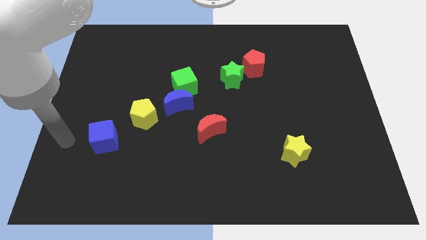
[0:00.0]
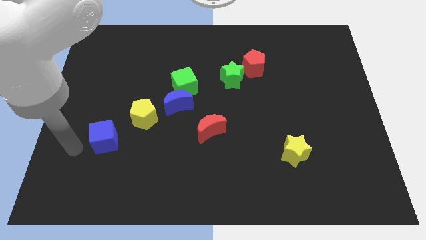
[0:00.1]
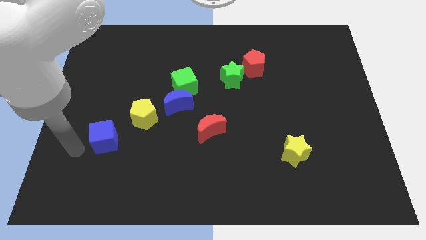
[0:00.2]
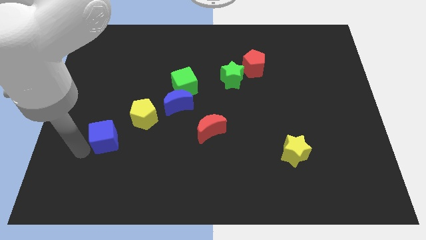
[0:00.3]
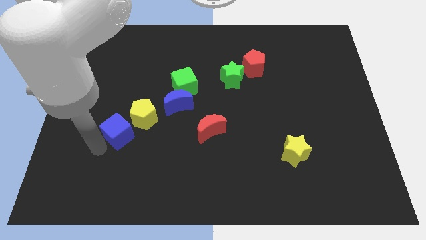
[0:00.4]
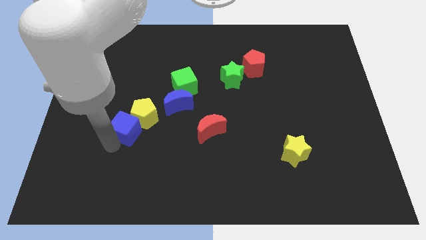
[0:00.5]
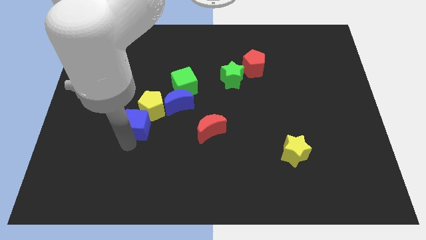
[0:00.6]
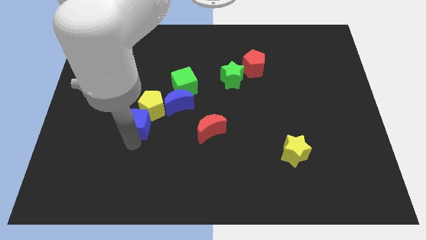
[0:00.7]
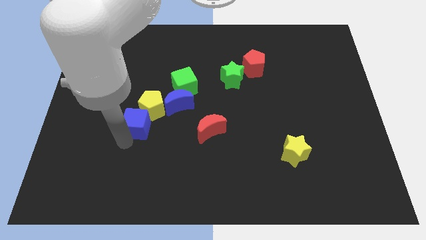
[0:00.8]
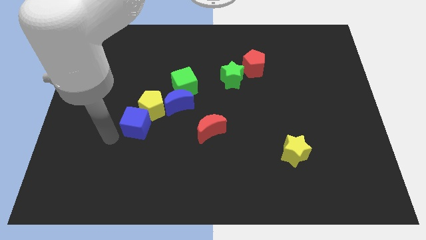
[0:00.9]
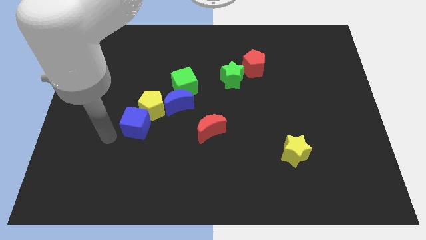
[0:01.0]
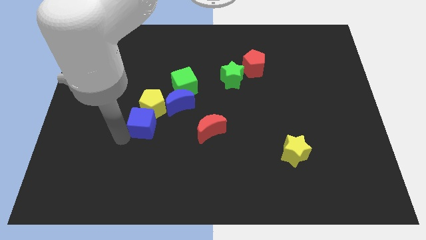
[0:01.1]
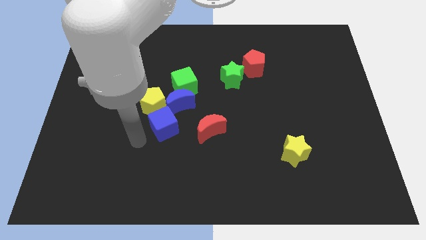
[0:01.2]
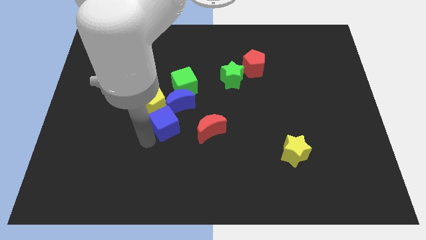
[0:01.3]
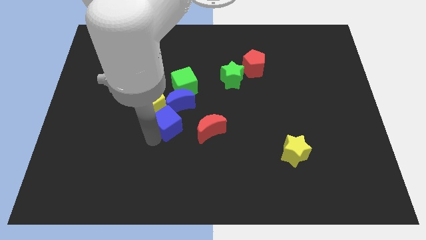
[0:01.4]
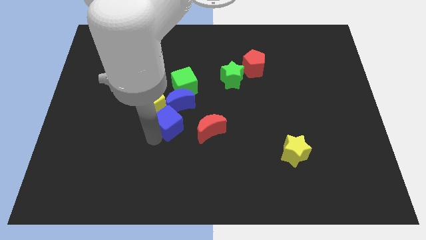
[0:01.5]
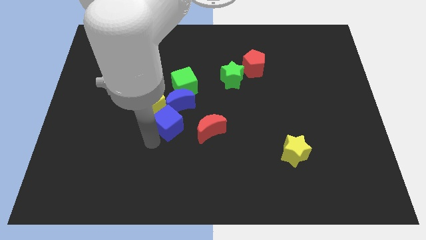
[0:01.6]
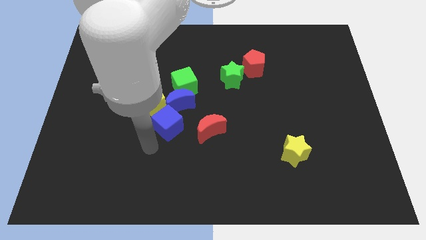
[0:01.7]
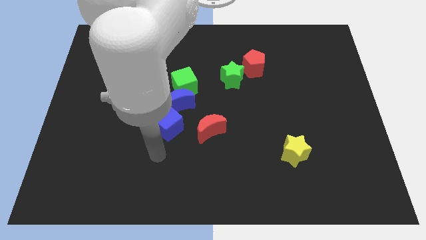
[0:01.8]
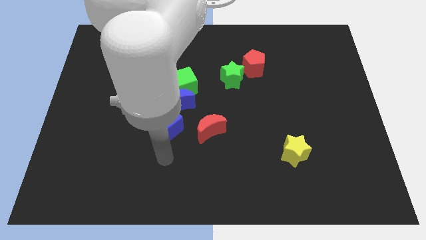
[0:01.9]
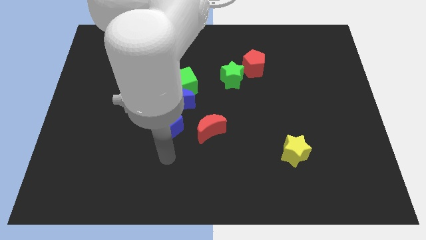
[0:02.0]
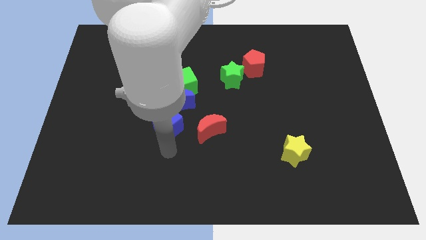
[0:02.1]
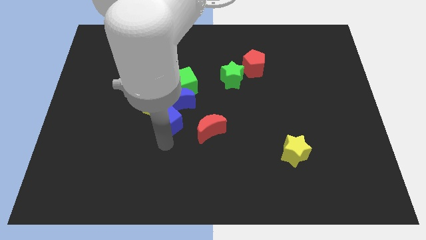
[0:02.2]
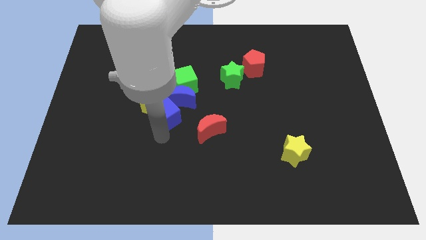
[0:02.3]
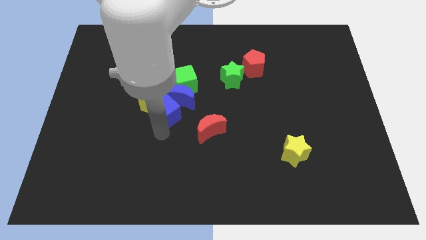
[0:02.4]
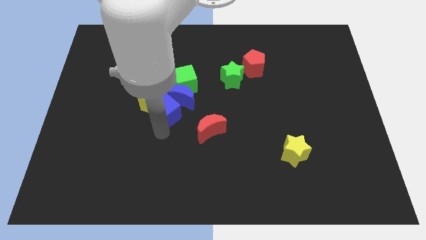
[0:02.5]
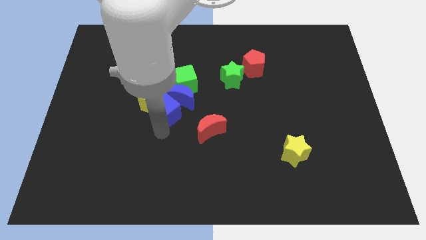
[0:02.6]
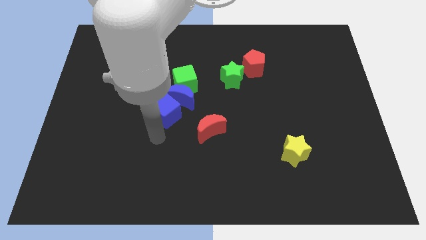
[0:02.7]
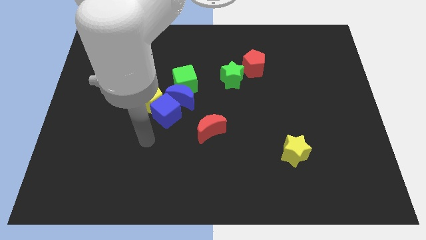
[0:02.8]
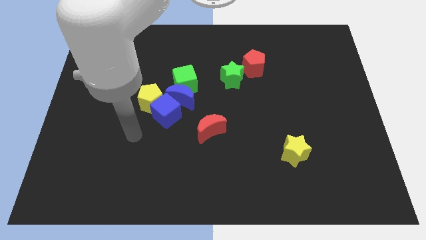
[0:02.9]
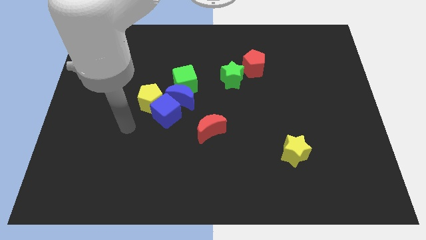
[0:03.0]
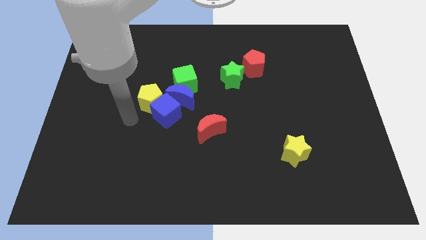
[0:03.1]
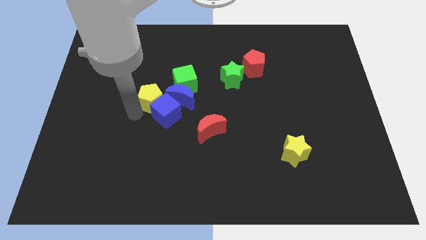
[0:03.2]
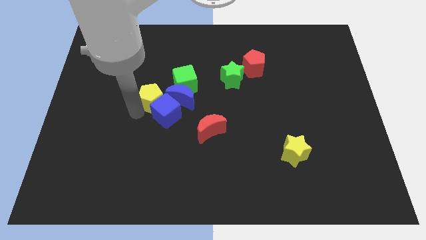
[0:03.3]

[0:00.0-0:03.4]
push the blue cube diagonally into the yellow pentagon

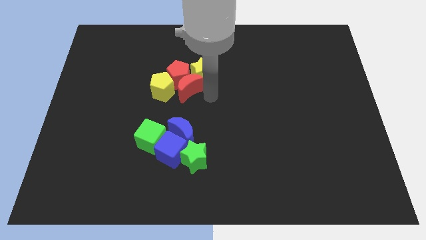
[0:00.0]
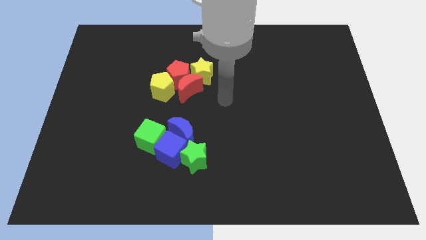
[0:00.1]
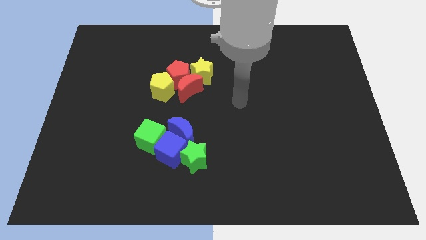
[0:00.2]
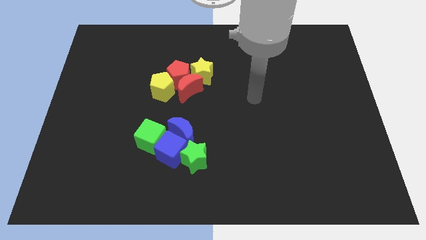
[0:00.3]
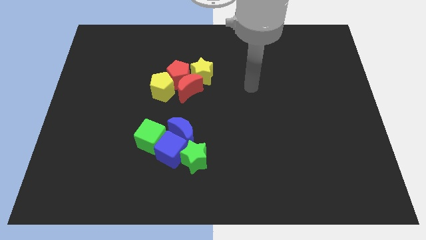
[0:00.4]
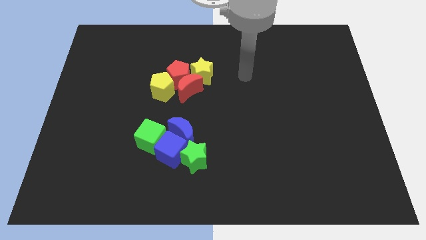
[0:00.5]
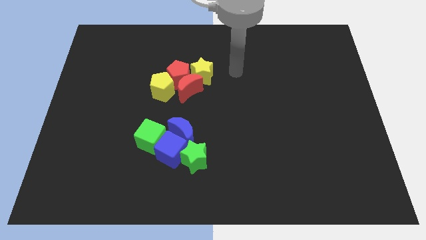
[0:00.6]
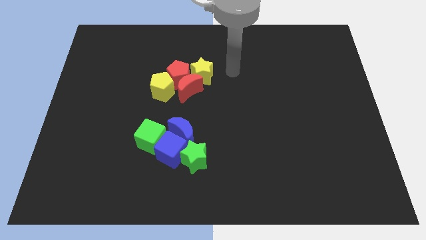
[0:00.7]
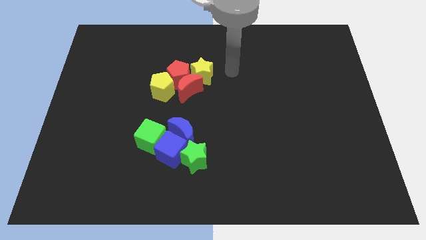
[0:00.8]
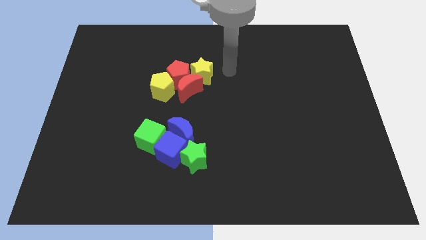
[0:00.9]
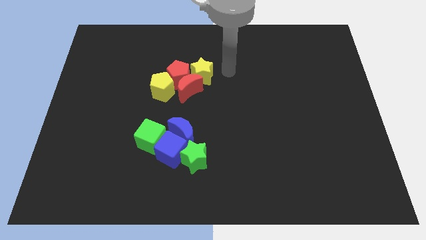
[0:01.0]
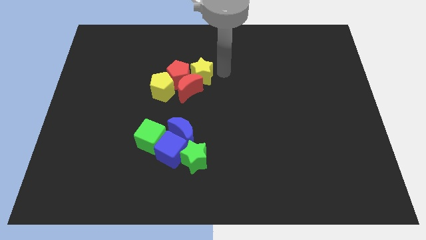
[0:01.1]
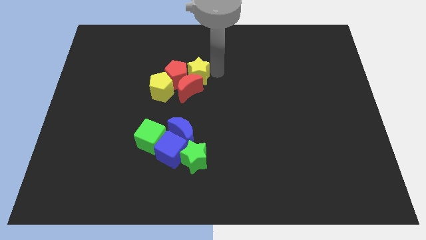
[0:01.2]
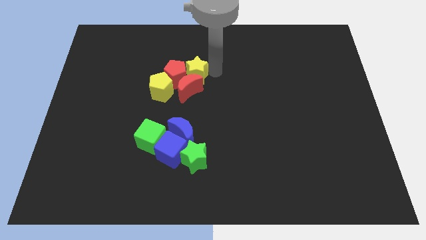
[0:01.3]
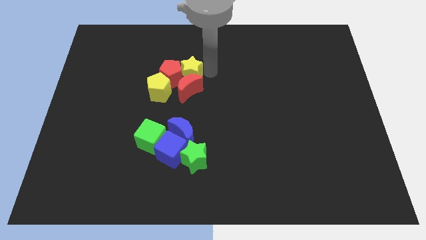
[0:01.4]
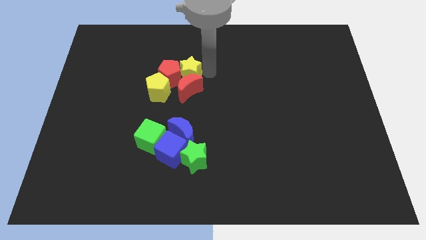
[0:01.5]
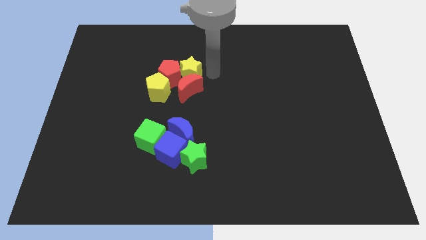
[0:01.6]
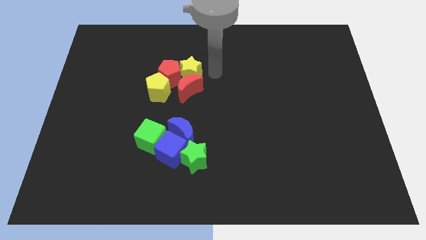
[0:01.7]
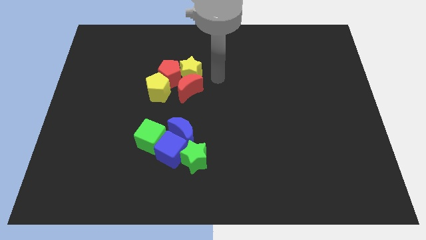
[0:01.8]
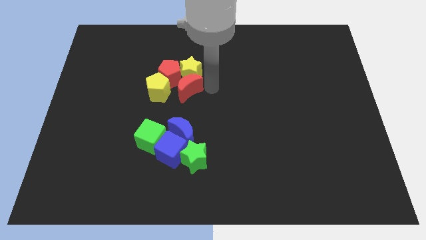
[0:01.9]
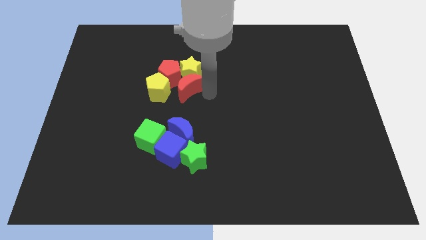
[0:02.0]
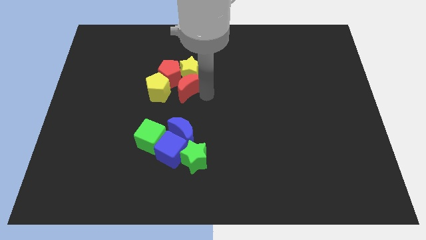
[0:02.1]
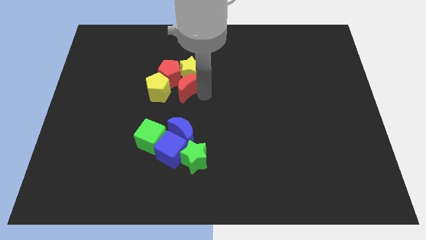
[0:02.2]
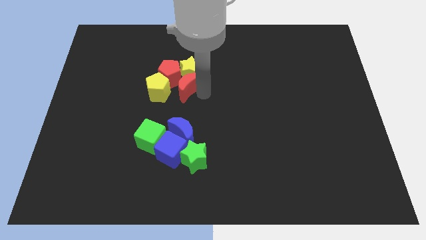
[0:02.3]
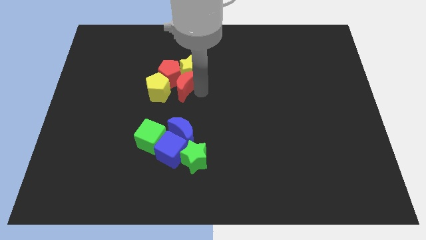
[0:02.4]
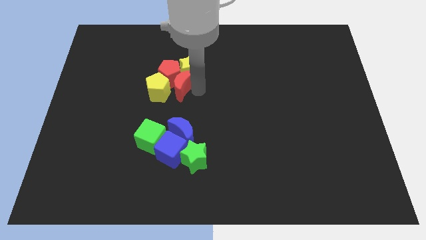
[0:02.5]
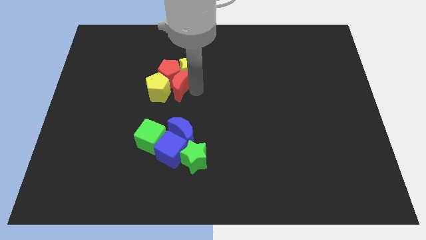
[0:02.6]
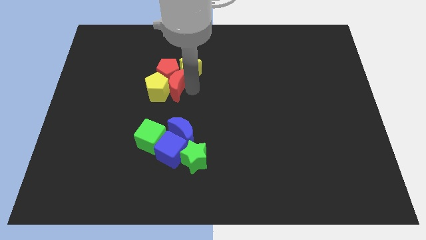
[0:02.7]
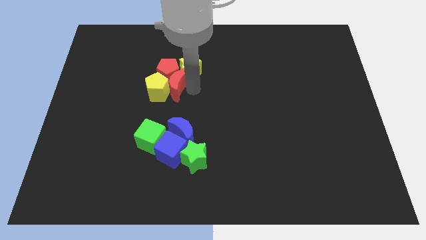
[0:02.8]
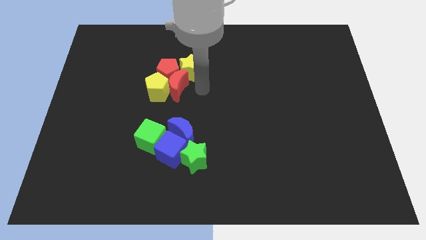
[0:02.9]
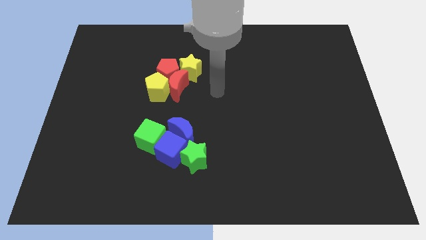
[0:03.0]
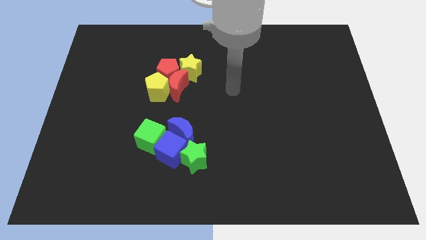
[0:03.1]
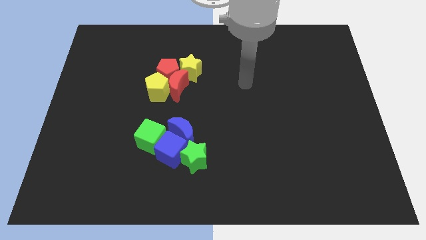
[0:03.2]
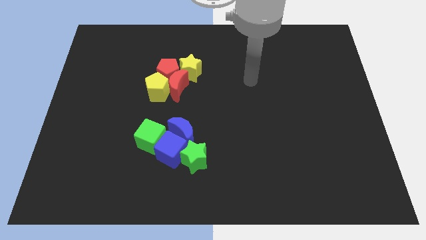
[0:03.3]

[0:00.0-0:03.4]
move the group of blocks to the left of the board

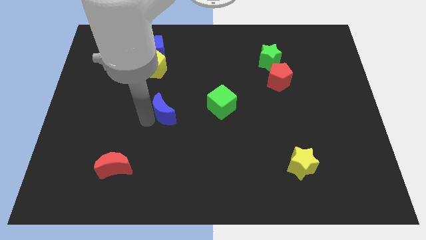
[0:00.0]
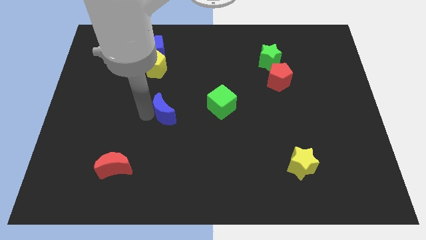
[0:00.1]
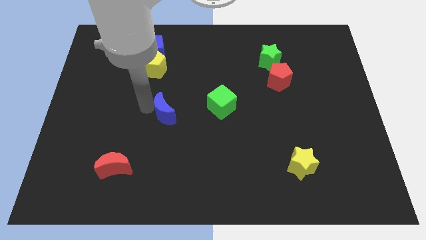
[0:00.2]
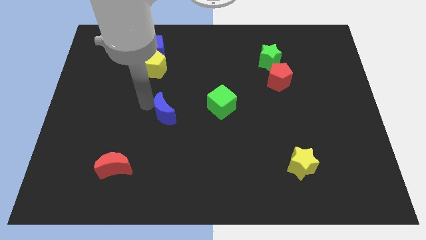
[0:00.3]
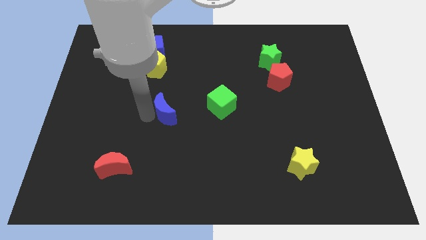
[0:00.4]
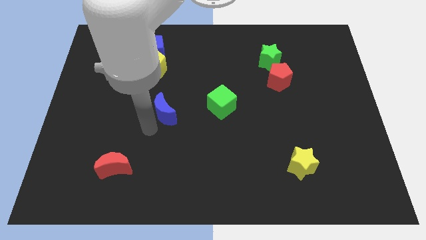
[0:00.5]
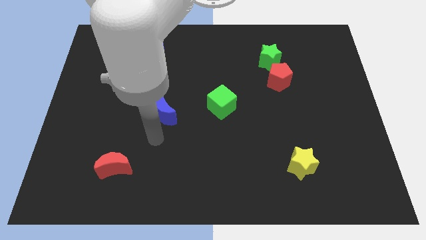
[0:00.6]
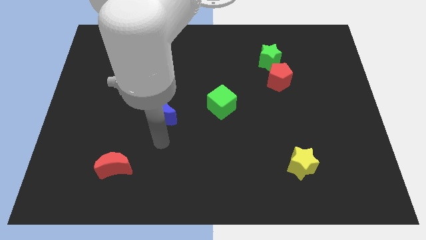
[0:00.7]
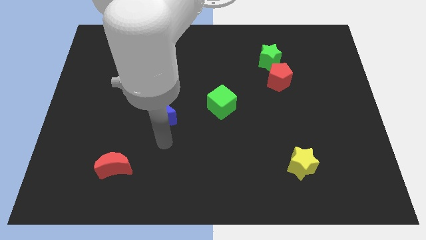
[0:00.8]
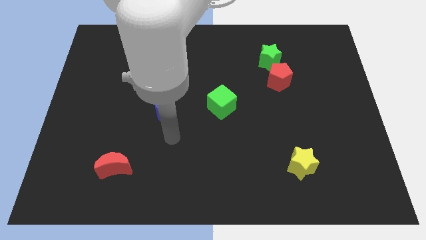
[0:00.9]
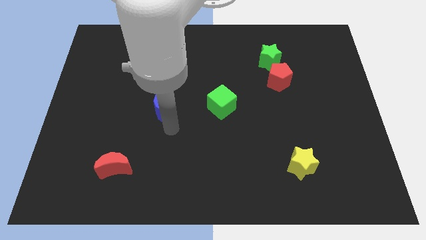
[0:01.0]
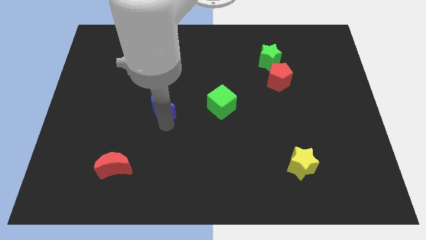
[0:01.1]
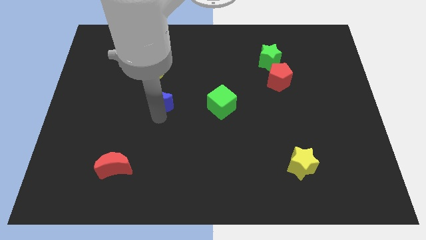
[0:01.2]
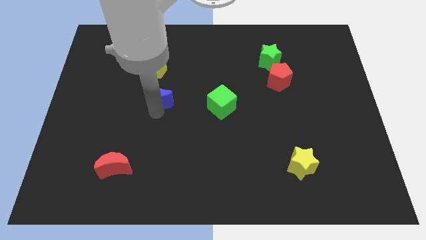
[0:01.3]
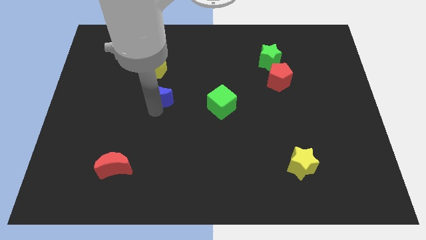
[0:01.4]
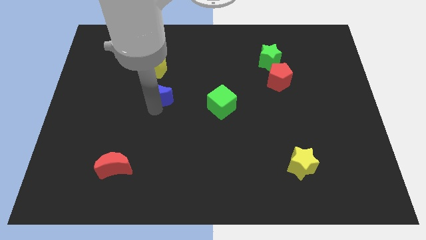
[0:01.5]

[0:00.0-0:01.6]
slide the blue crescent towards the bottom side of the yellow pentagon

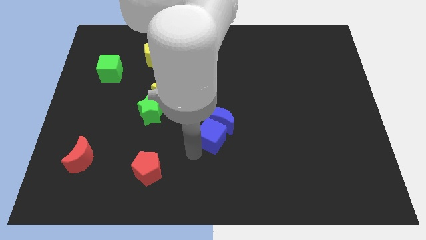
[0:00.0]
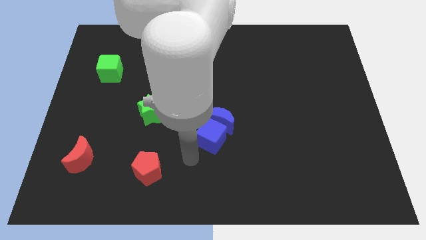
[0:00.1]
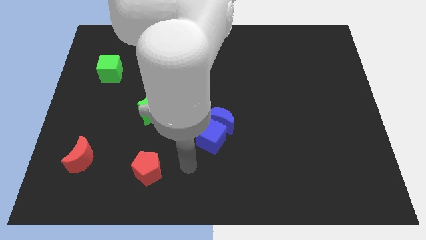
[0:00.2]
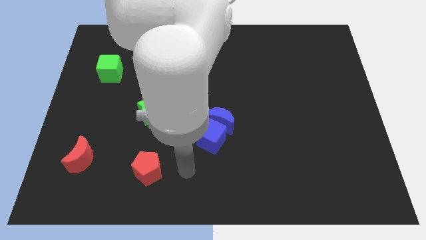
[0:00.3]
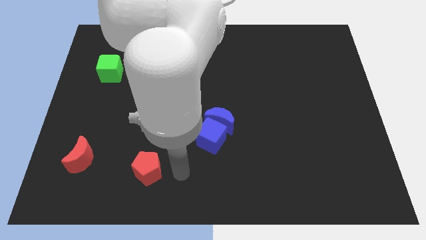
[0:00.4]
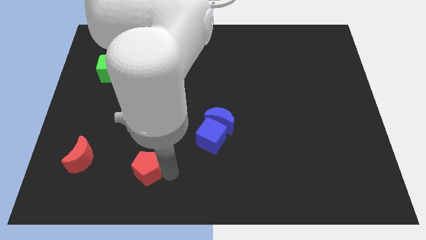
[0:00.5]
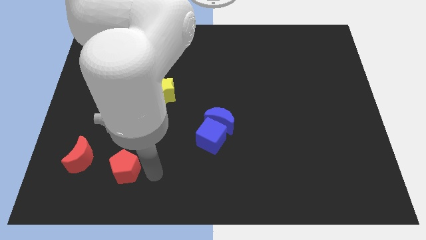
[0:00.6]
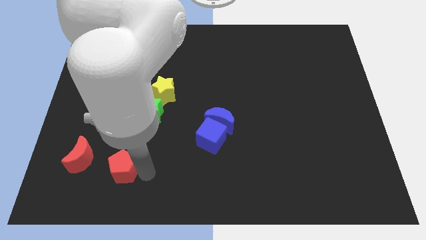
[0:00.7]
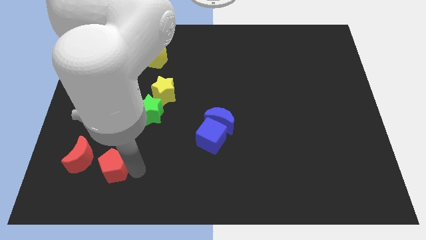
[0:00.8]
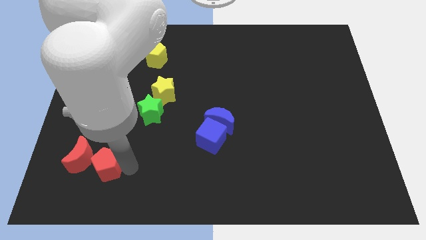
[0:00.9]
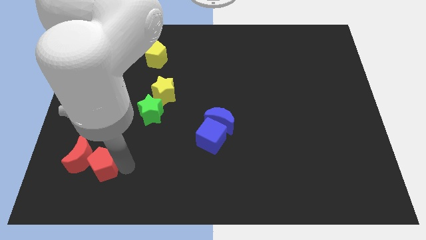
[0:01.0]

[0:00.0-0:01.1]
move the red pentagon to the right side of the red crescent
